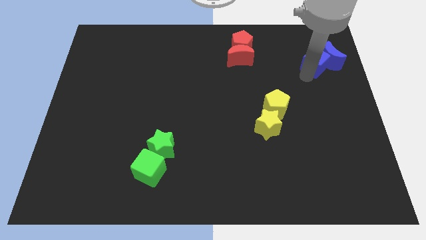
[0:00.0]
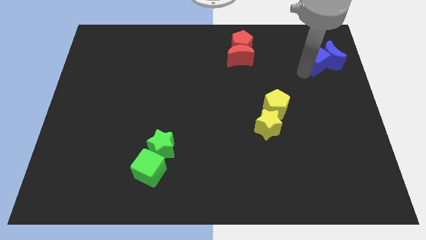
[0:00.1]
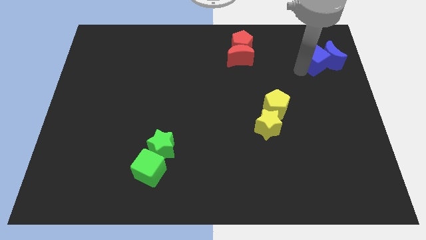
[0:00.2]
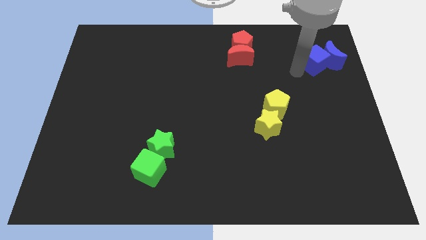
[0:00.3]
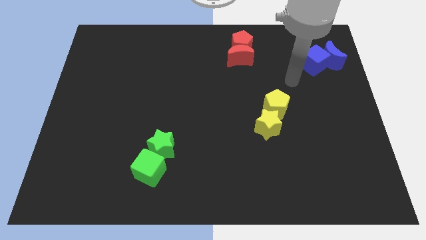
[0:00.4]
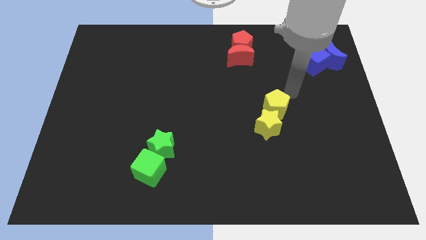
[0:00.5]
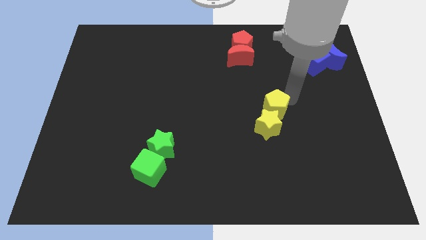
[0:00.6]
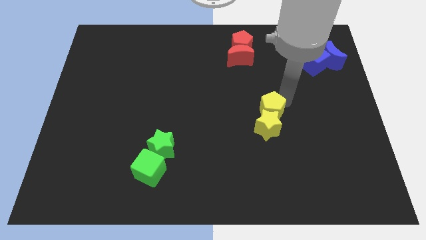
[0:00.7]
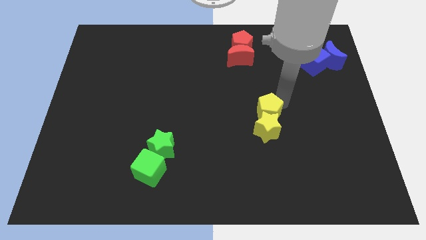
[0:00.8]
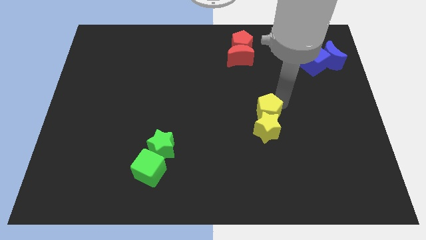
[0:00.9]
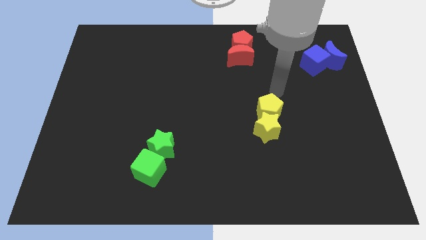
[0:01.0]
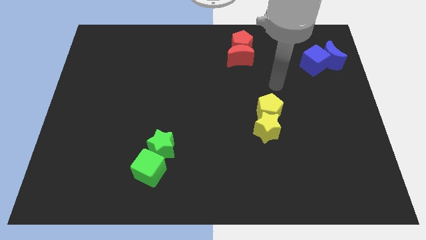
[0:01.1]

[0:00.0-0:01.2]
push the yellow pentagon into the yellow star

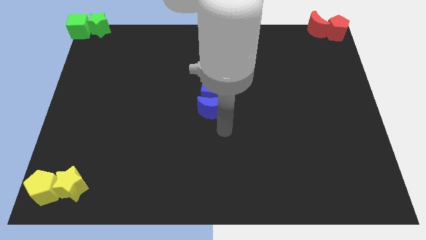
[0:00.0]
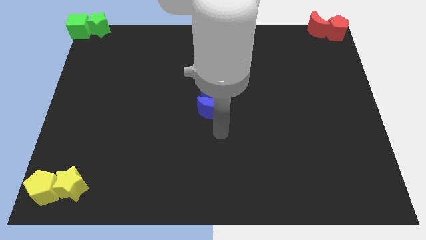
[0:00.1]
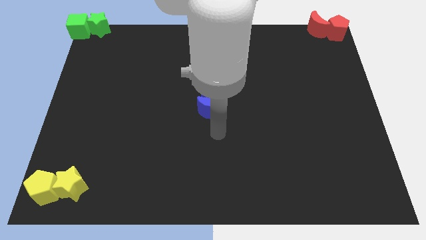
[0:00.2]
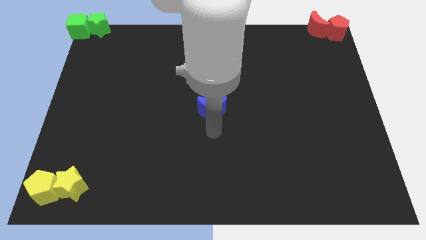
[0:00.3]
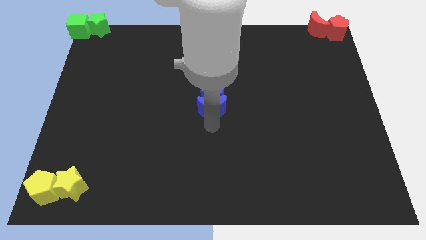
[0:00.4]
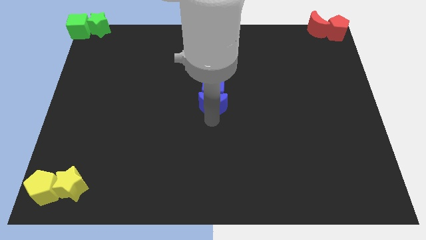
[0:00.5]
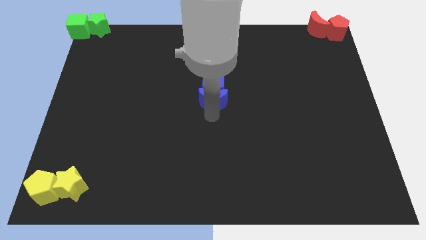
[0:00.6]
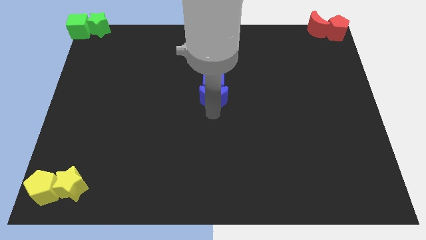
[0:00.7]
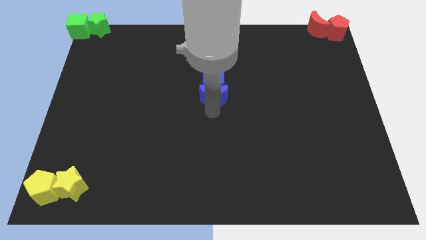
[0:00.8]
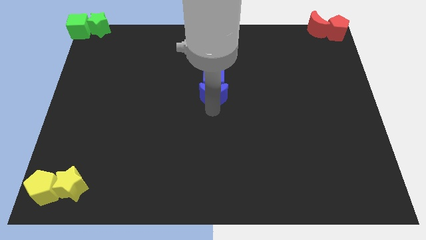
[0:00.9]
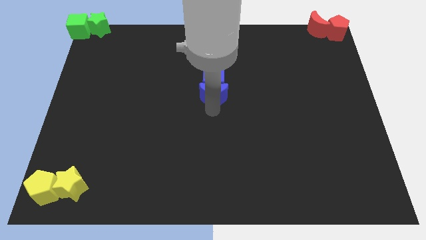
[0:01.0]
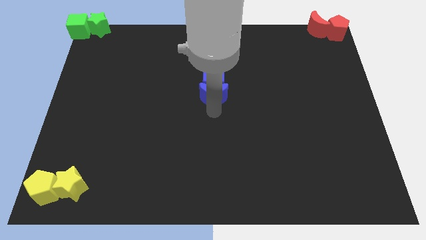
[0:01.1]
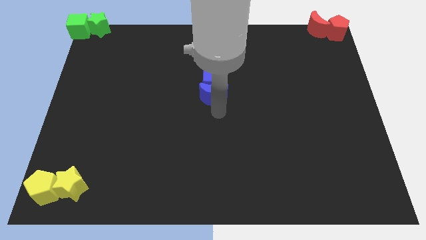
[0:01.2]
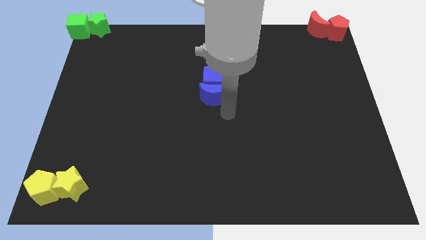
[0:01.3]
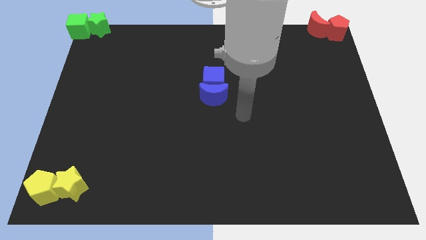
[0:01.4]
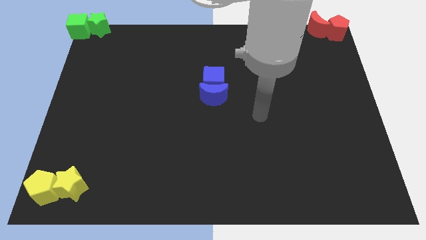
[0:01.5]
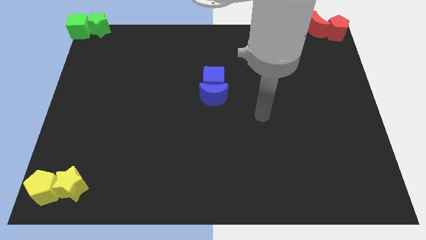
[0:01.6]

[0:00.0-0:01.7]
push blue moon into the blue cube

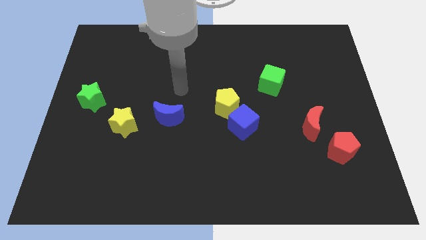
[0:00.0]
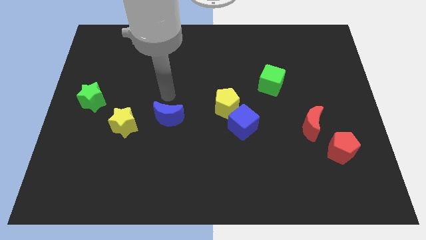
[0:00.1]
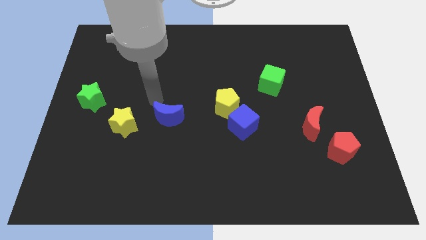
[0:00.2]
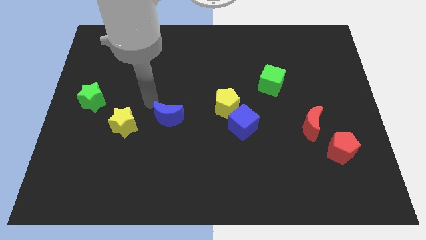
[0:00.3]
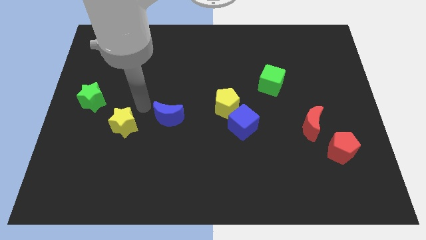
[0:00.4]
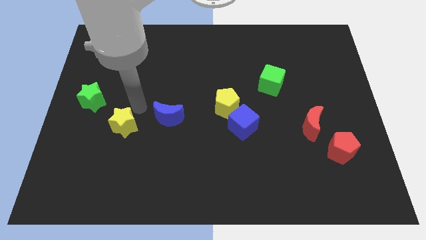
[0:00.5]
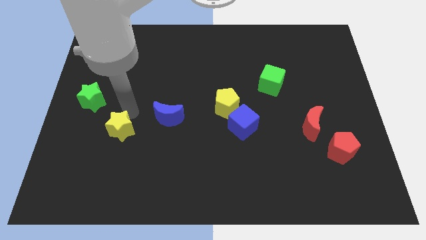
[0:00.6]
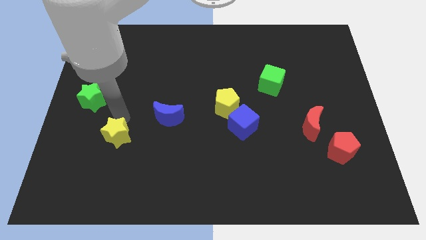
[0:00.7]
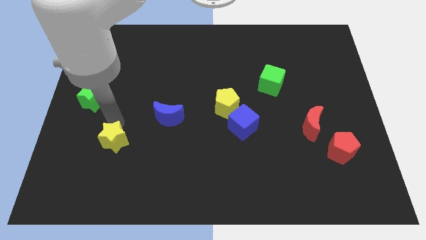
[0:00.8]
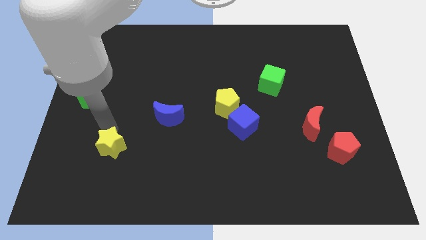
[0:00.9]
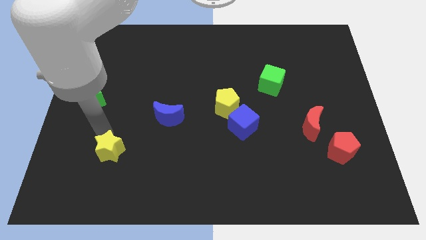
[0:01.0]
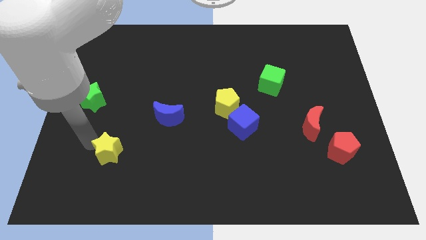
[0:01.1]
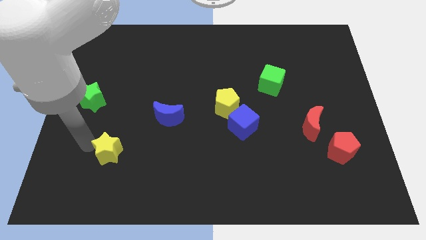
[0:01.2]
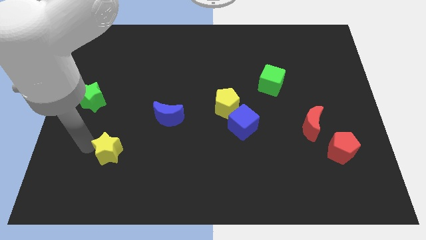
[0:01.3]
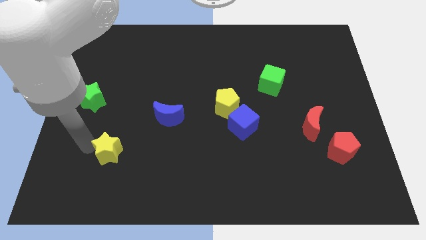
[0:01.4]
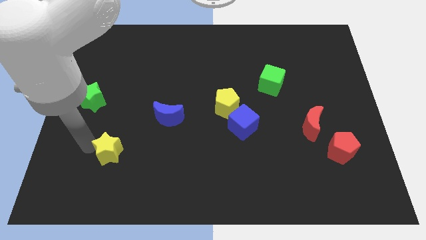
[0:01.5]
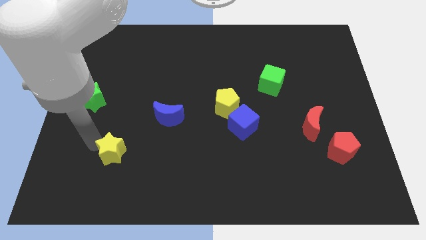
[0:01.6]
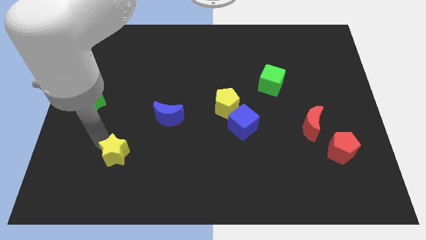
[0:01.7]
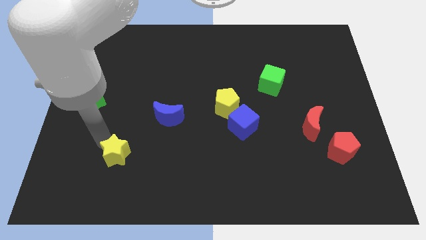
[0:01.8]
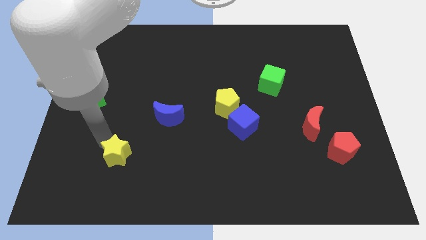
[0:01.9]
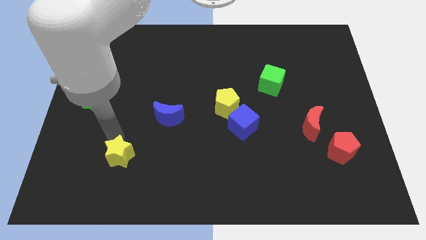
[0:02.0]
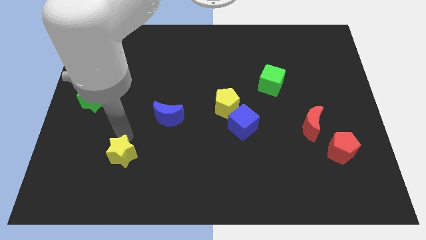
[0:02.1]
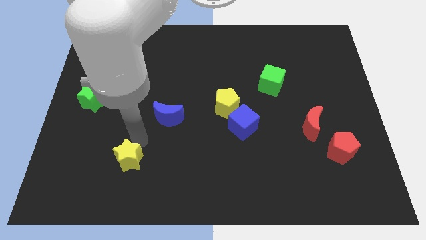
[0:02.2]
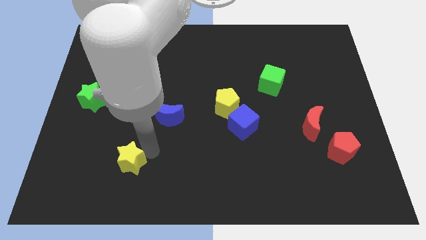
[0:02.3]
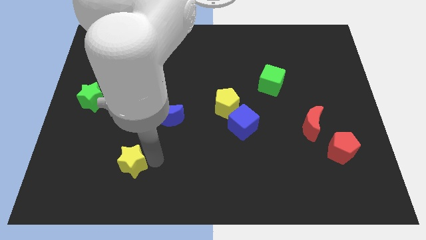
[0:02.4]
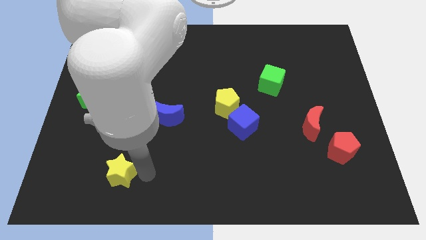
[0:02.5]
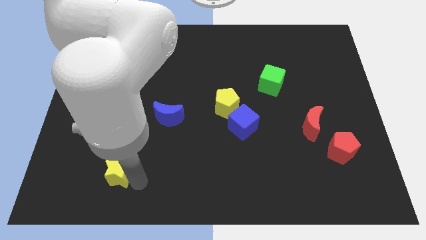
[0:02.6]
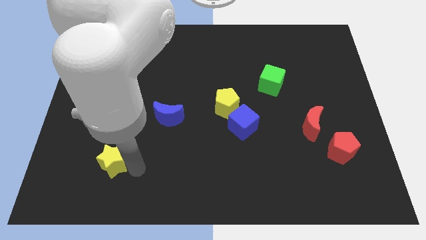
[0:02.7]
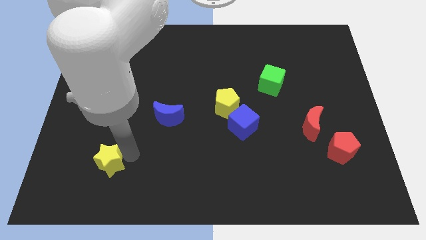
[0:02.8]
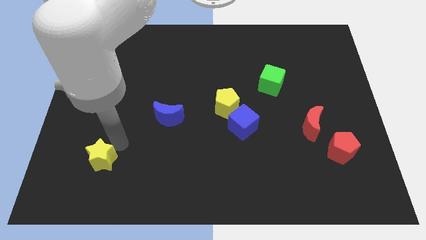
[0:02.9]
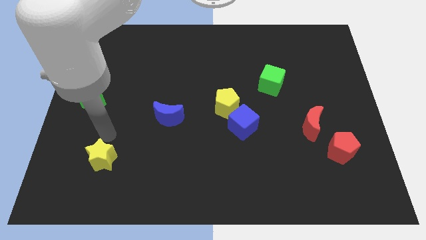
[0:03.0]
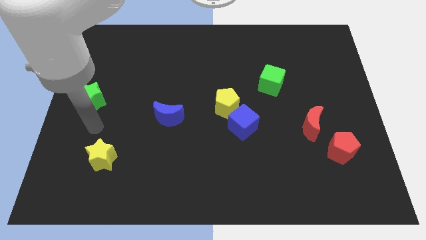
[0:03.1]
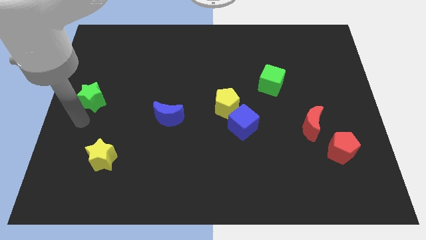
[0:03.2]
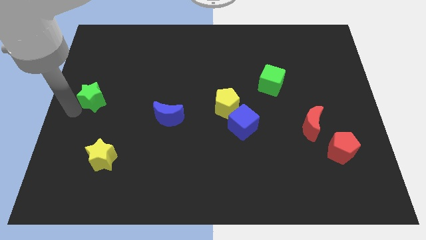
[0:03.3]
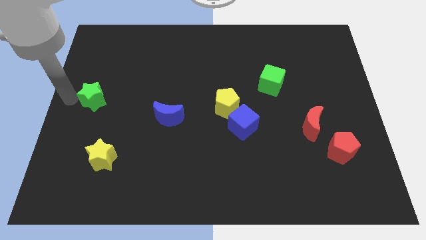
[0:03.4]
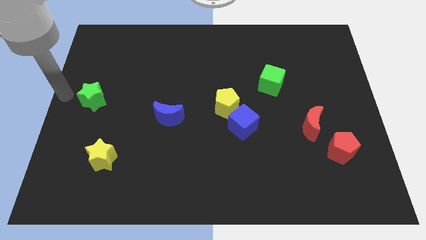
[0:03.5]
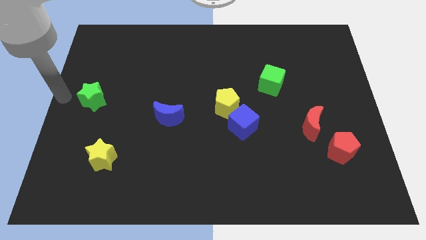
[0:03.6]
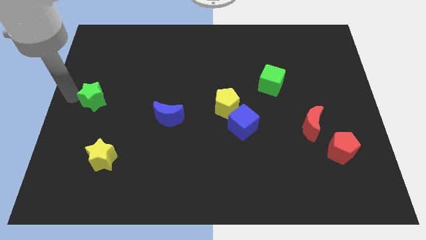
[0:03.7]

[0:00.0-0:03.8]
place the yellow star below the blue moon

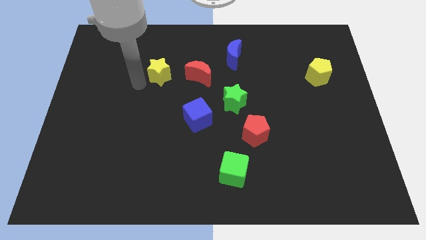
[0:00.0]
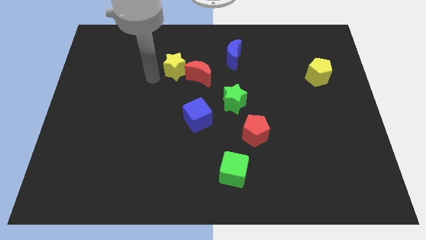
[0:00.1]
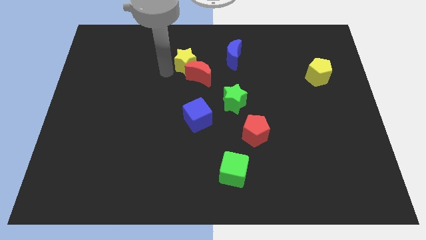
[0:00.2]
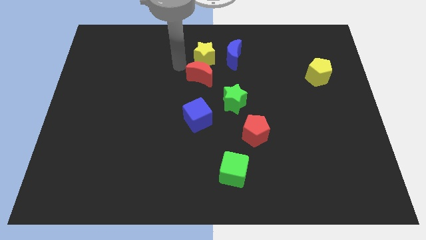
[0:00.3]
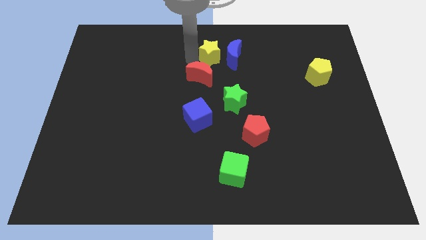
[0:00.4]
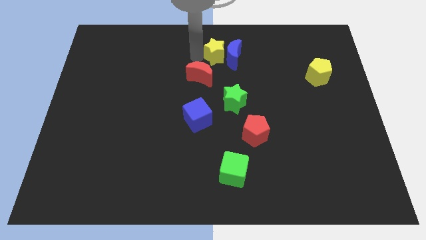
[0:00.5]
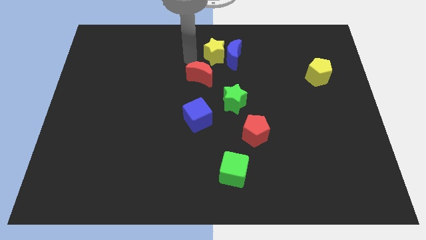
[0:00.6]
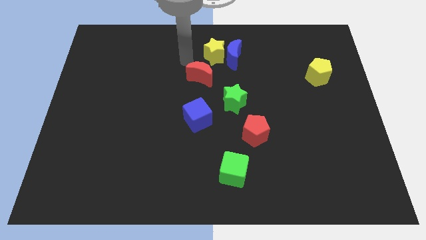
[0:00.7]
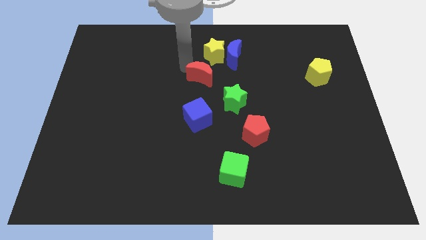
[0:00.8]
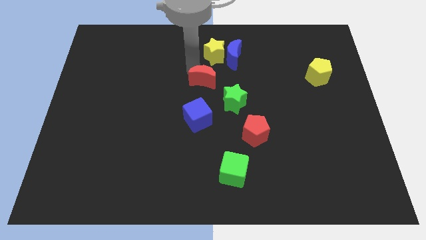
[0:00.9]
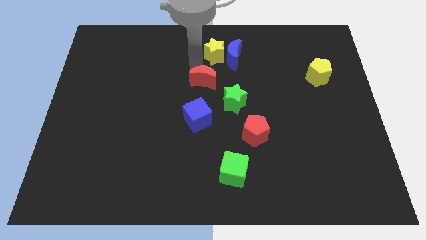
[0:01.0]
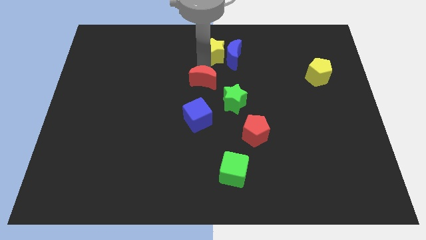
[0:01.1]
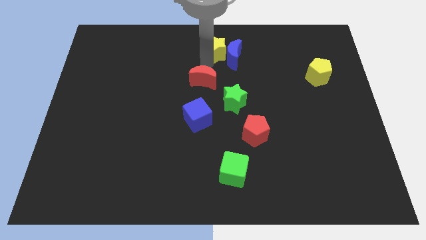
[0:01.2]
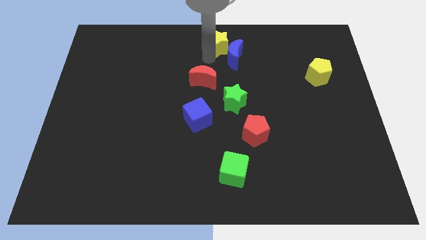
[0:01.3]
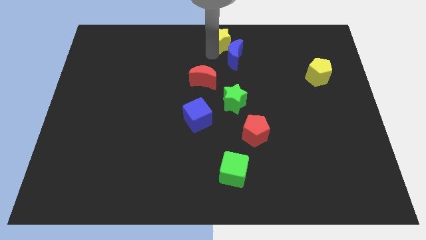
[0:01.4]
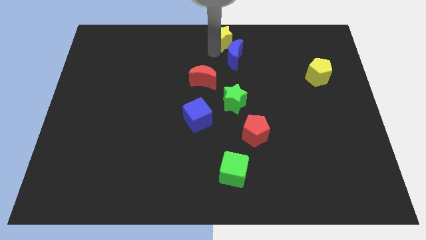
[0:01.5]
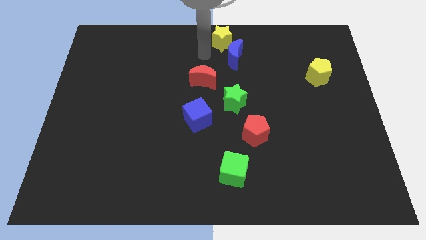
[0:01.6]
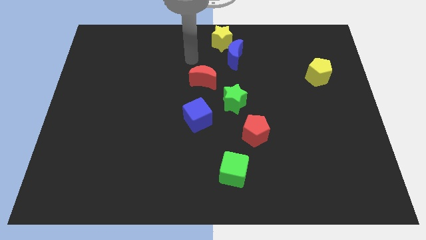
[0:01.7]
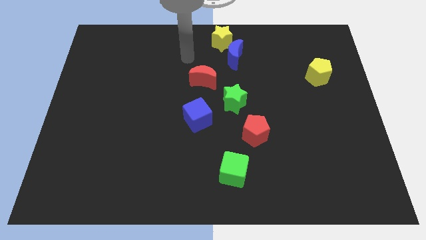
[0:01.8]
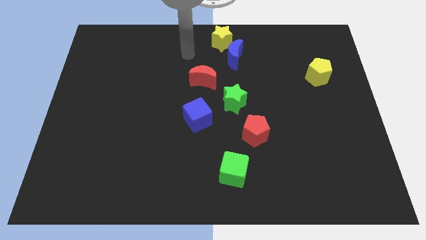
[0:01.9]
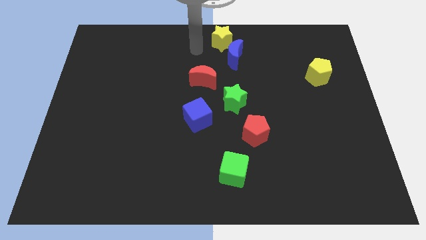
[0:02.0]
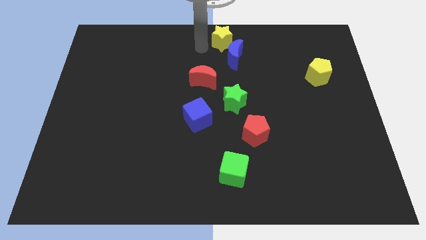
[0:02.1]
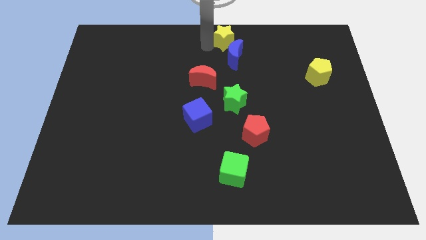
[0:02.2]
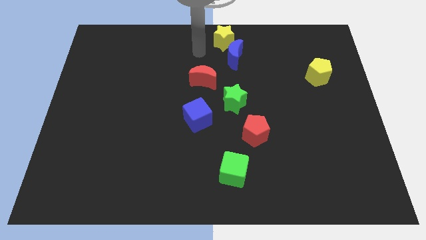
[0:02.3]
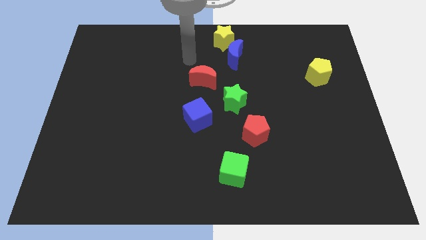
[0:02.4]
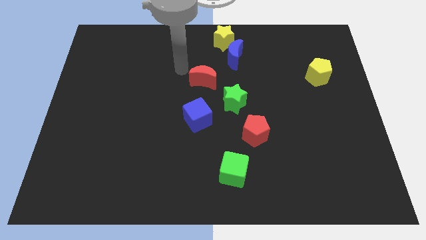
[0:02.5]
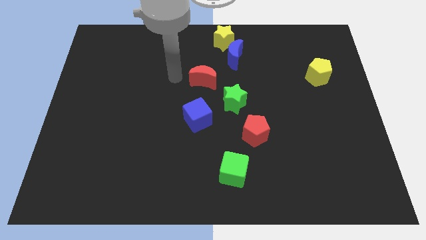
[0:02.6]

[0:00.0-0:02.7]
push the yellow star to the top center of the board
